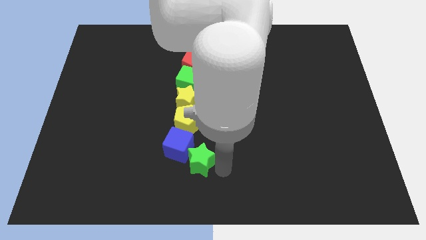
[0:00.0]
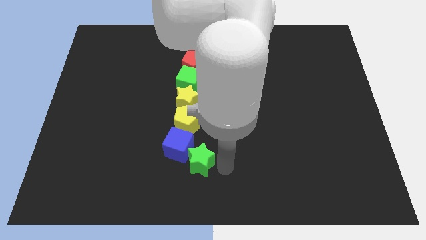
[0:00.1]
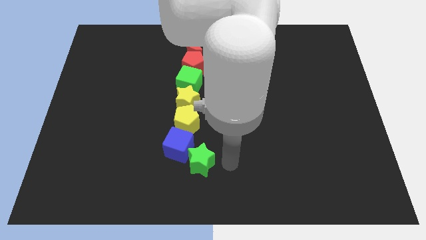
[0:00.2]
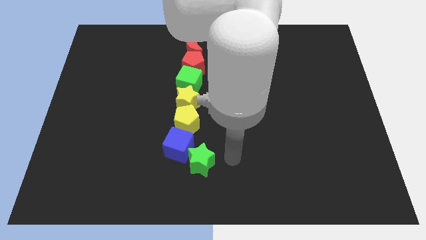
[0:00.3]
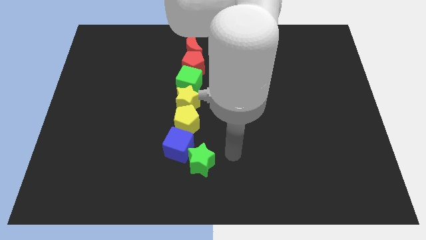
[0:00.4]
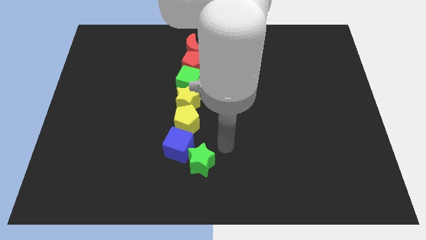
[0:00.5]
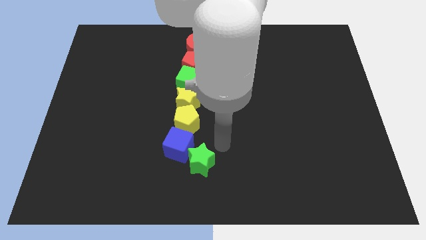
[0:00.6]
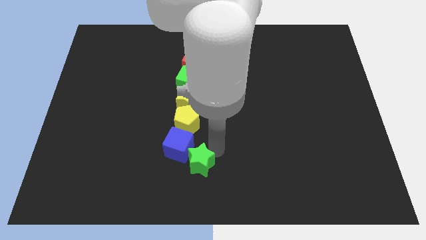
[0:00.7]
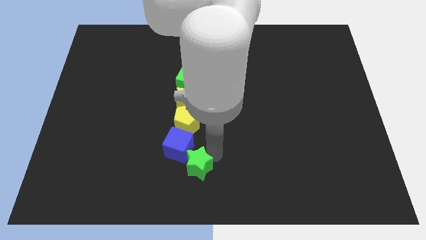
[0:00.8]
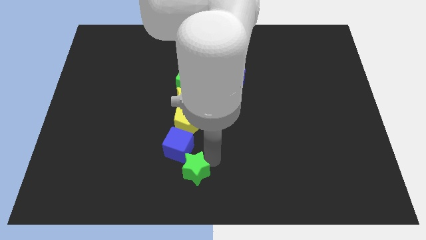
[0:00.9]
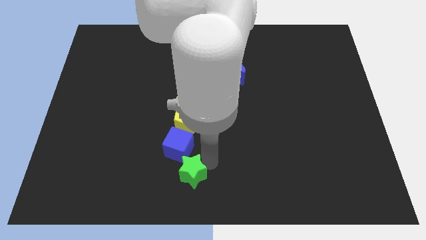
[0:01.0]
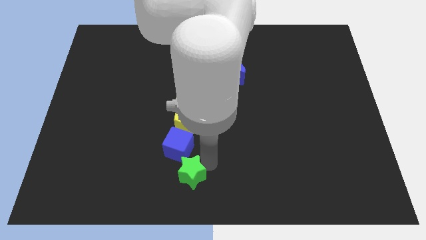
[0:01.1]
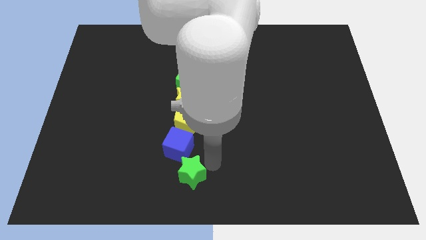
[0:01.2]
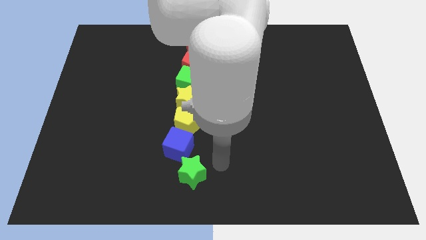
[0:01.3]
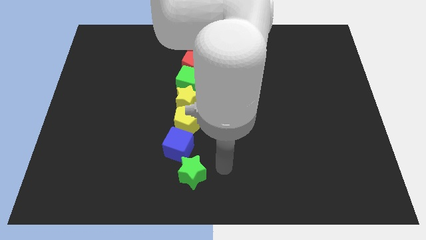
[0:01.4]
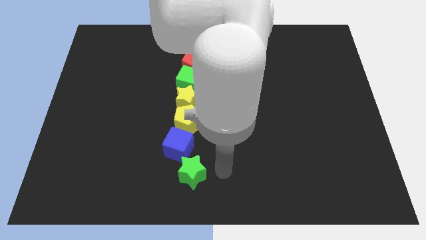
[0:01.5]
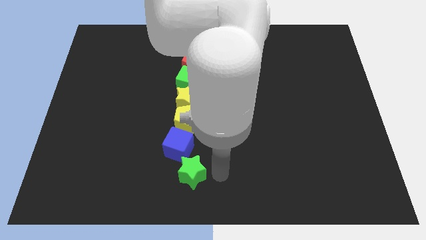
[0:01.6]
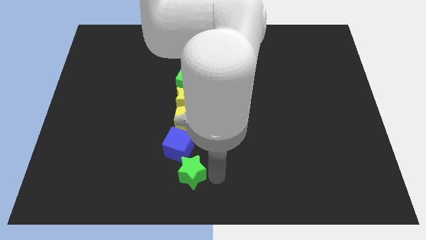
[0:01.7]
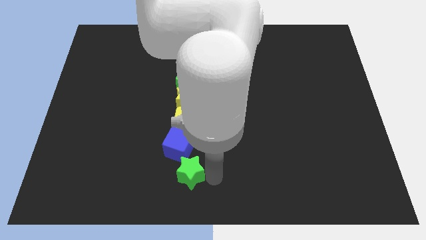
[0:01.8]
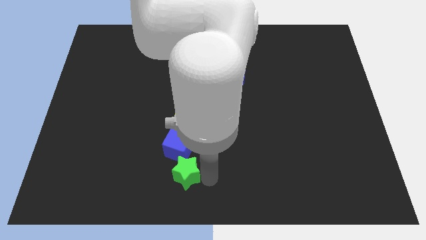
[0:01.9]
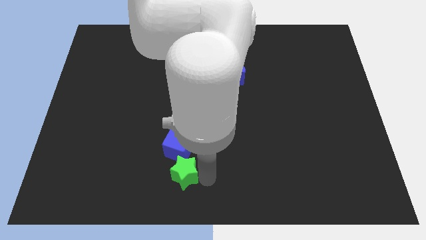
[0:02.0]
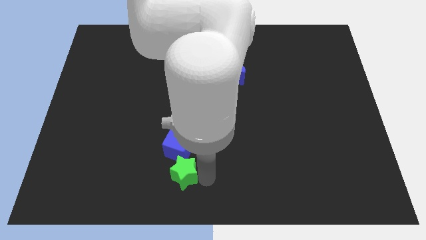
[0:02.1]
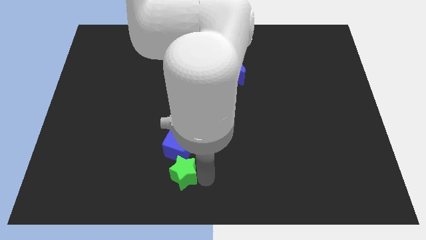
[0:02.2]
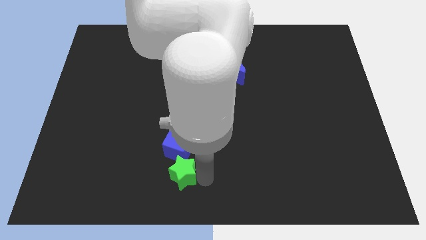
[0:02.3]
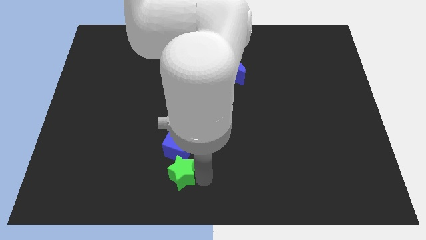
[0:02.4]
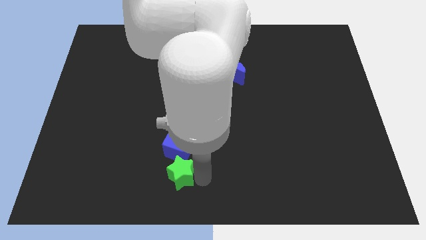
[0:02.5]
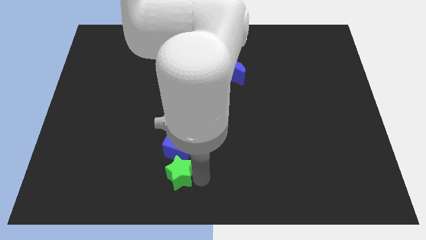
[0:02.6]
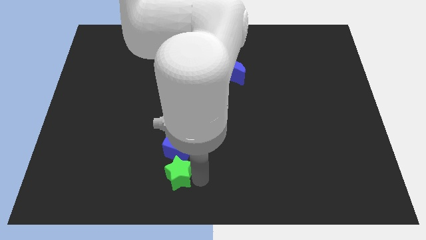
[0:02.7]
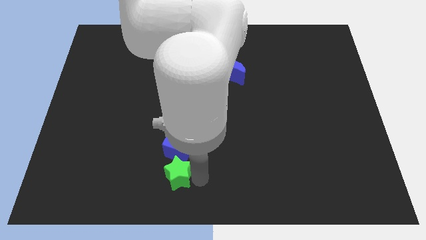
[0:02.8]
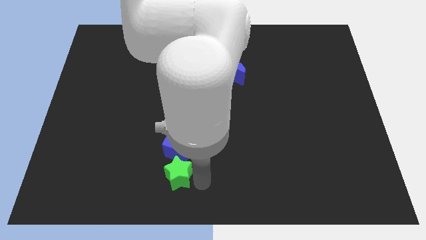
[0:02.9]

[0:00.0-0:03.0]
move the green star down to the blue cube

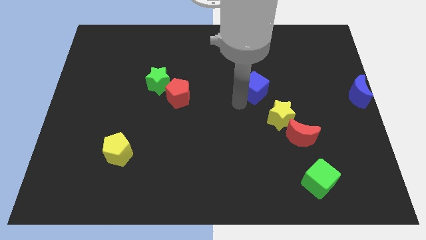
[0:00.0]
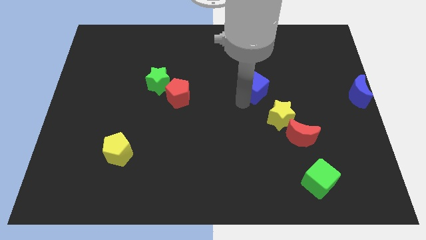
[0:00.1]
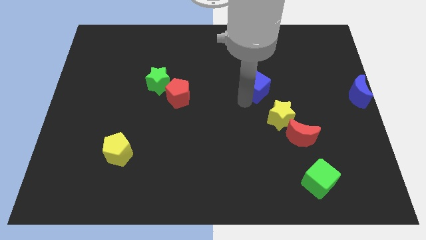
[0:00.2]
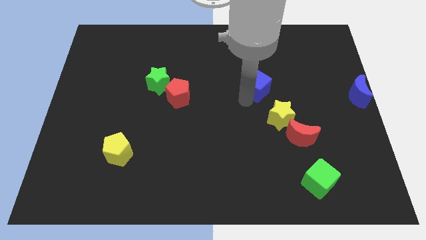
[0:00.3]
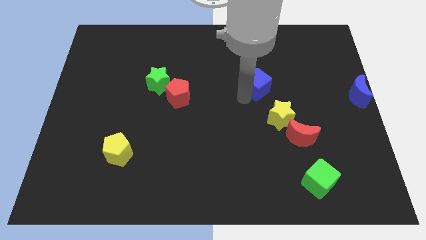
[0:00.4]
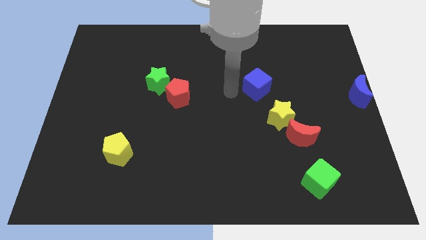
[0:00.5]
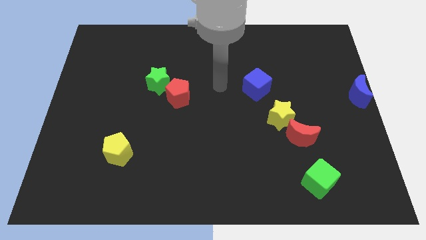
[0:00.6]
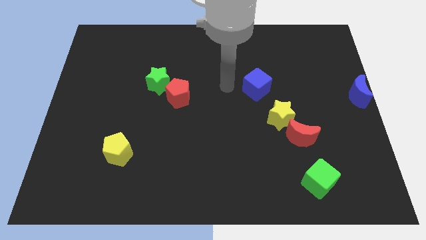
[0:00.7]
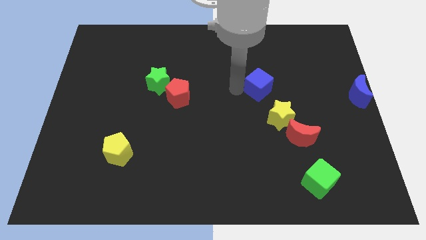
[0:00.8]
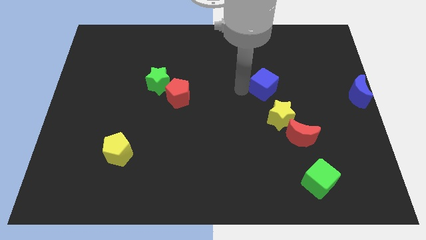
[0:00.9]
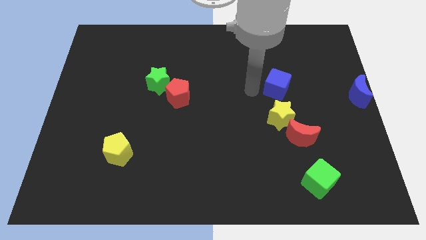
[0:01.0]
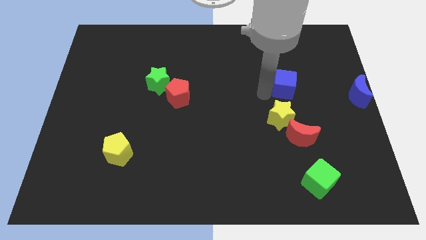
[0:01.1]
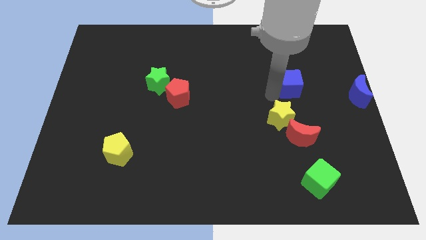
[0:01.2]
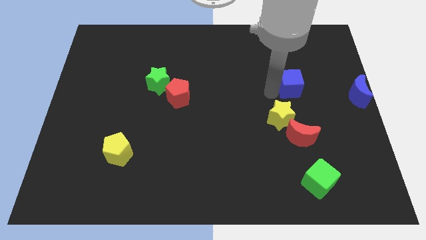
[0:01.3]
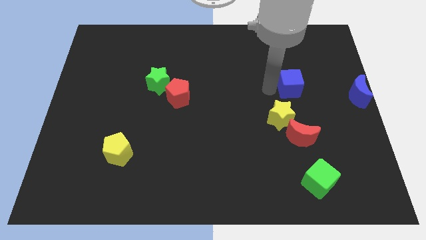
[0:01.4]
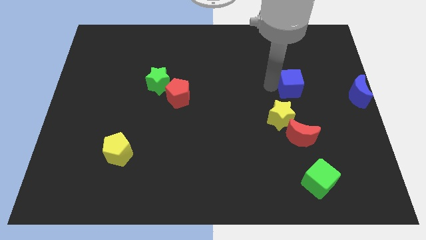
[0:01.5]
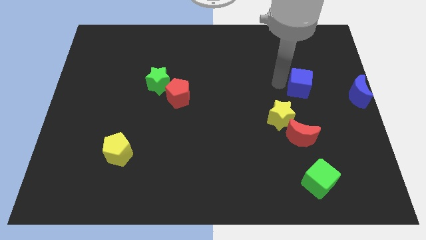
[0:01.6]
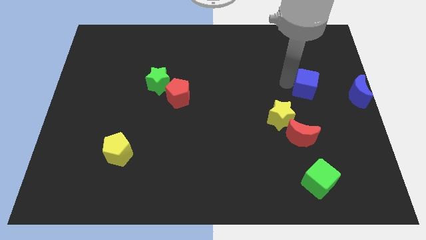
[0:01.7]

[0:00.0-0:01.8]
place the blue cube above the yellow star

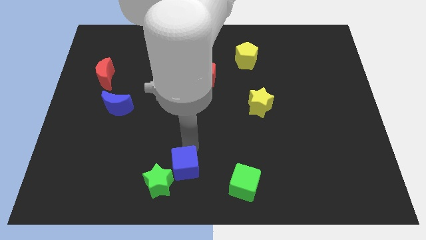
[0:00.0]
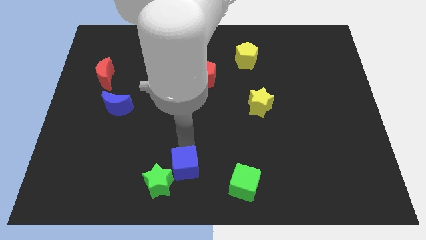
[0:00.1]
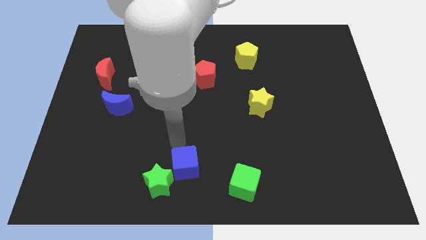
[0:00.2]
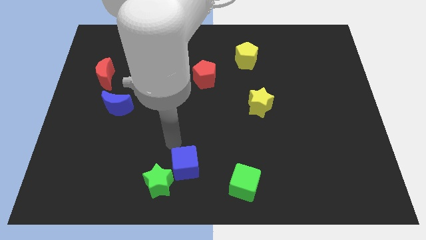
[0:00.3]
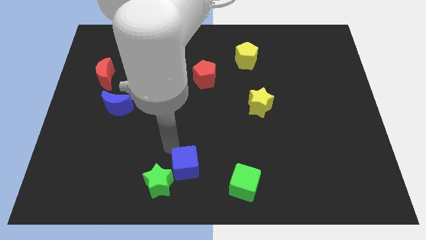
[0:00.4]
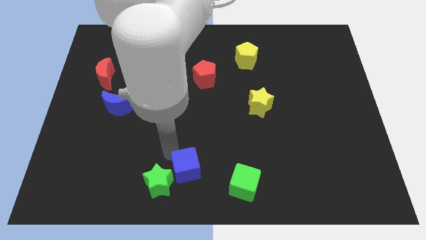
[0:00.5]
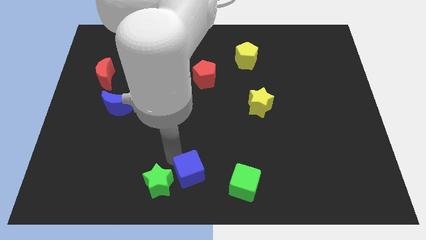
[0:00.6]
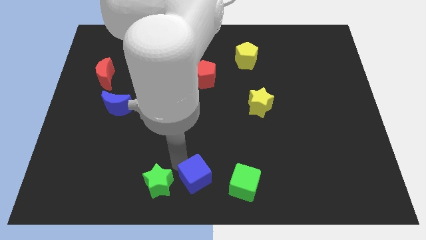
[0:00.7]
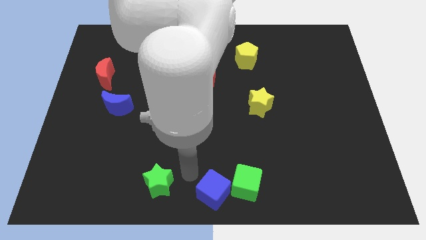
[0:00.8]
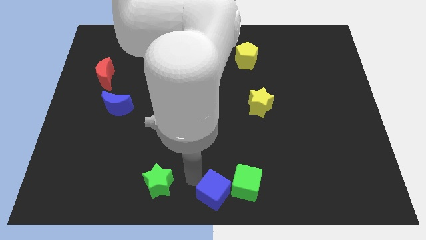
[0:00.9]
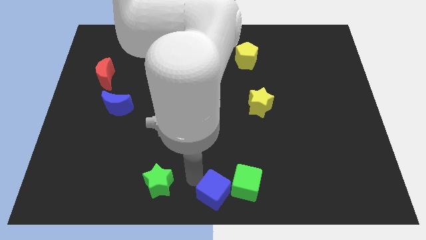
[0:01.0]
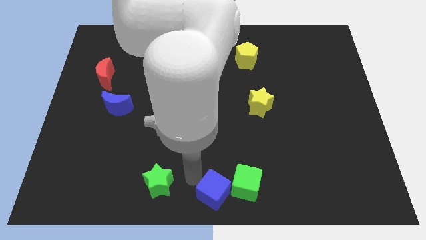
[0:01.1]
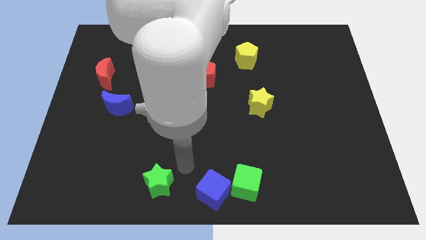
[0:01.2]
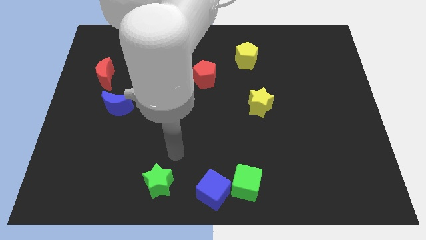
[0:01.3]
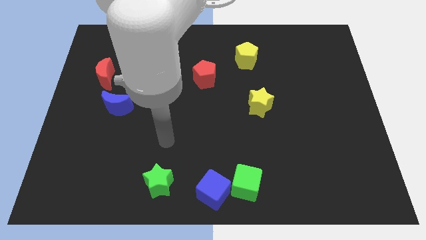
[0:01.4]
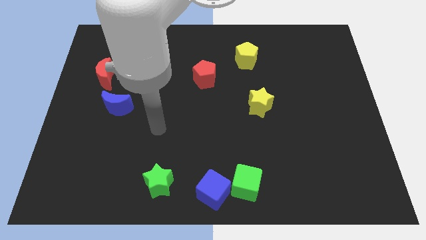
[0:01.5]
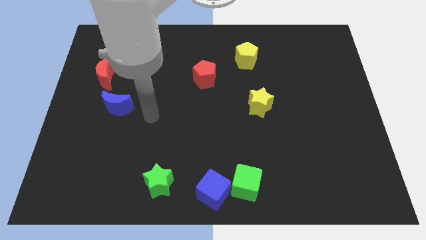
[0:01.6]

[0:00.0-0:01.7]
slightly move the blue cube towards the bottom center of the board

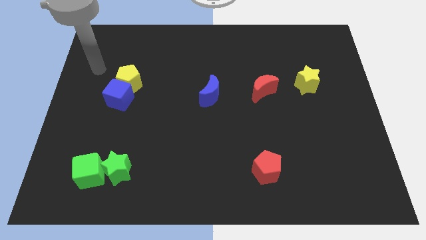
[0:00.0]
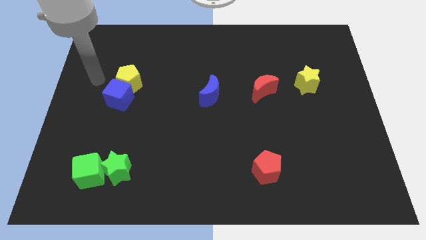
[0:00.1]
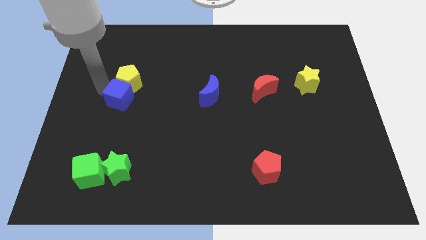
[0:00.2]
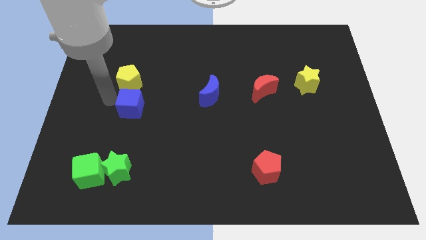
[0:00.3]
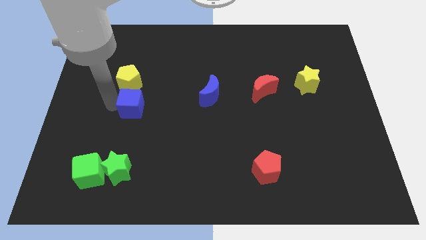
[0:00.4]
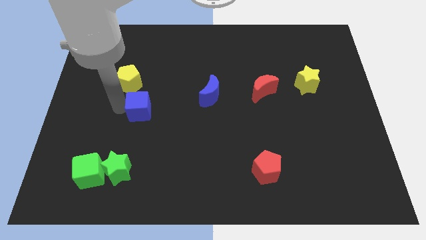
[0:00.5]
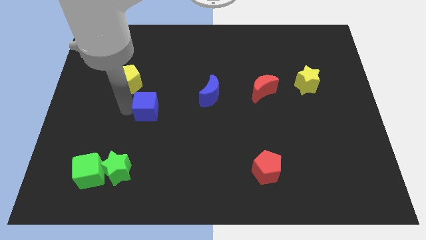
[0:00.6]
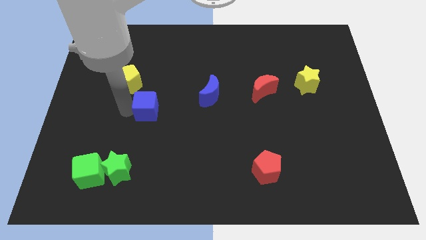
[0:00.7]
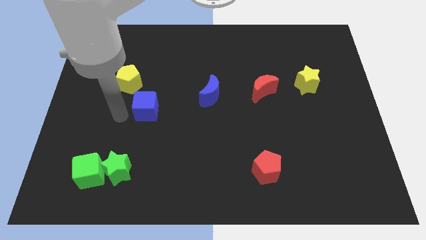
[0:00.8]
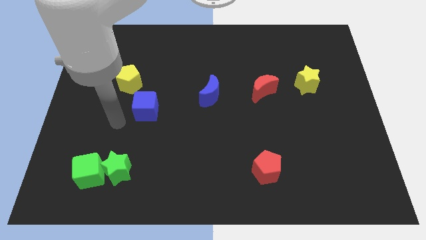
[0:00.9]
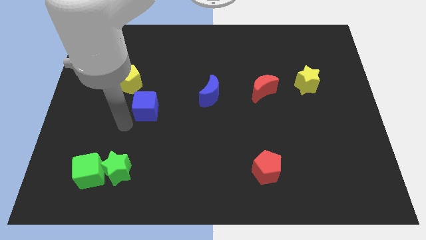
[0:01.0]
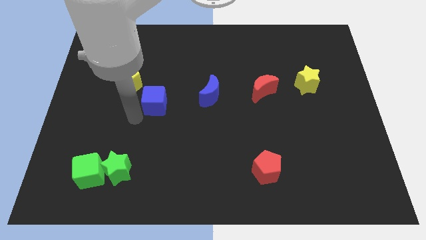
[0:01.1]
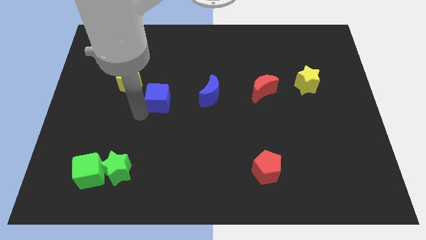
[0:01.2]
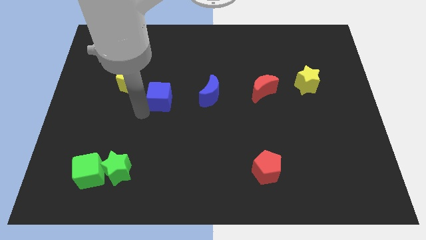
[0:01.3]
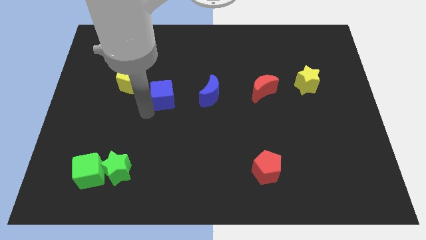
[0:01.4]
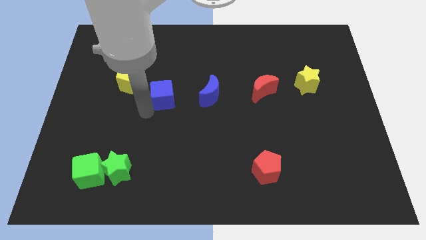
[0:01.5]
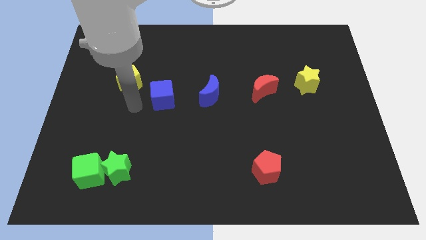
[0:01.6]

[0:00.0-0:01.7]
move the blue cube to the left of the blue moon

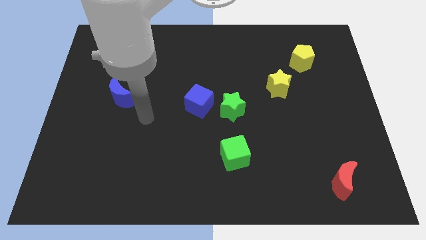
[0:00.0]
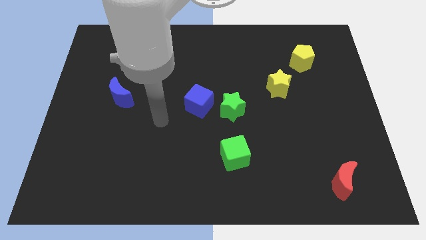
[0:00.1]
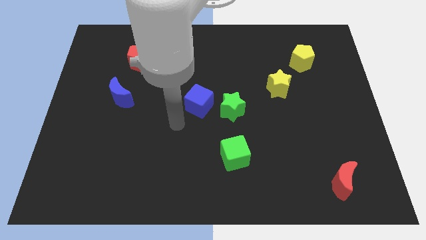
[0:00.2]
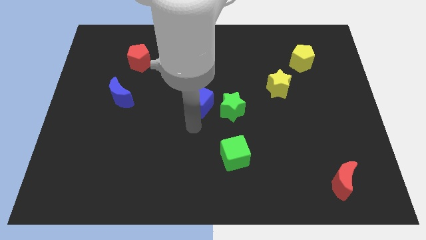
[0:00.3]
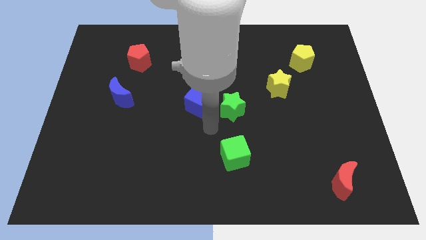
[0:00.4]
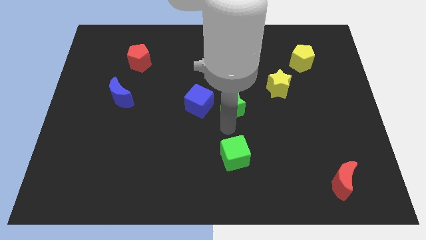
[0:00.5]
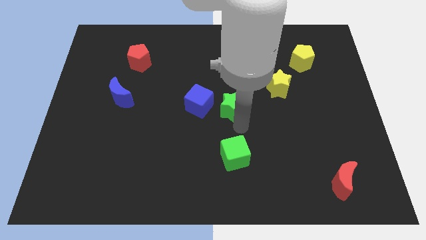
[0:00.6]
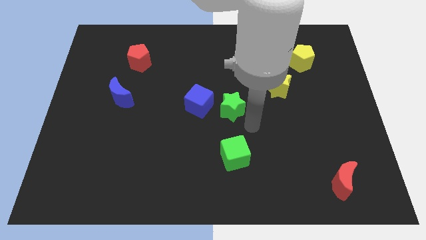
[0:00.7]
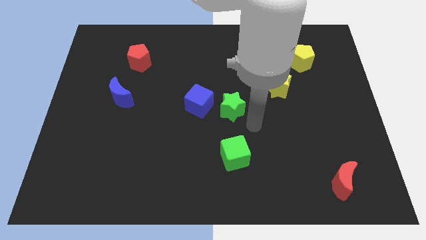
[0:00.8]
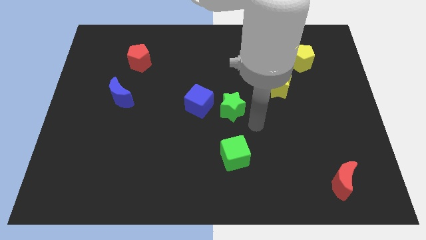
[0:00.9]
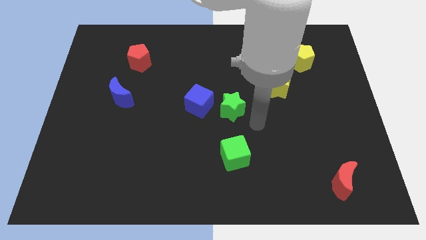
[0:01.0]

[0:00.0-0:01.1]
slide your hand to the top right of green cube
